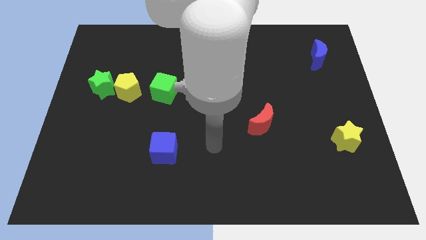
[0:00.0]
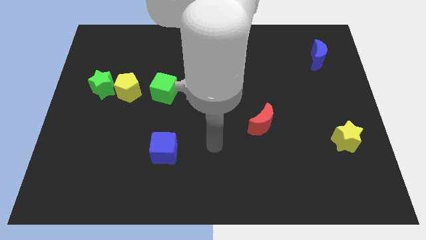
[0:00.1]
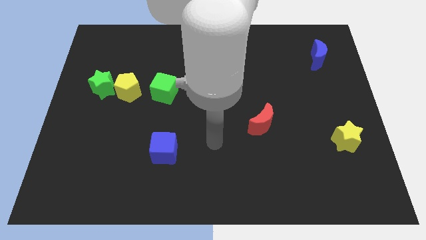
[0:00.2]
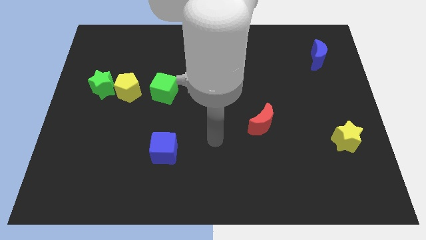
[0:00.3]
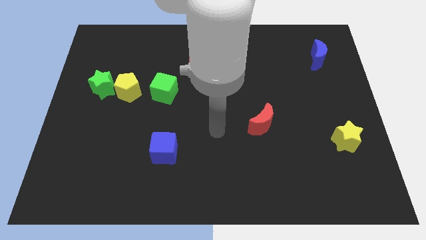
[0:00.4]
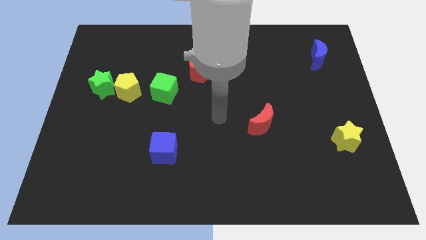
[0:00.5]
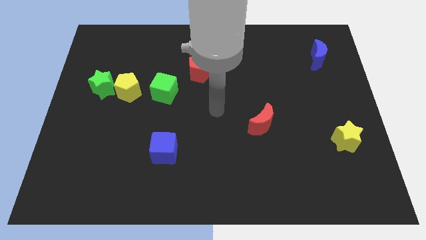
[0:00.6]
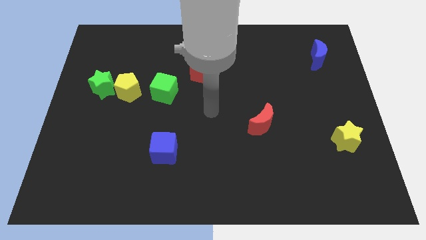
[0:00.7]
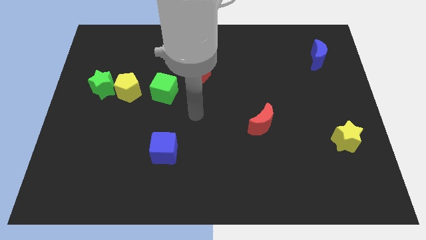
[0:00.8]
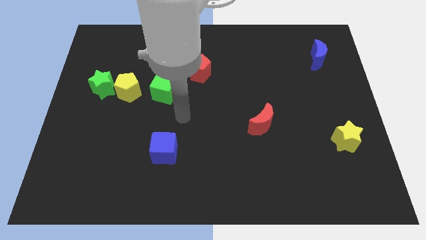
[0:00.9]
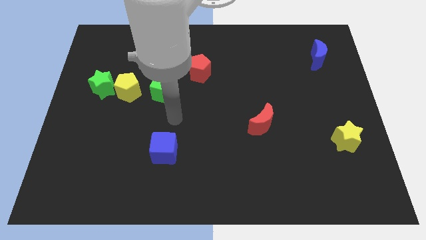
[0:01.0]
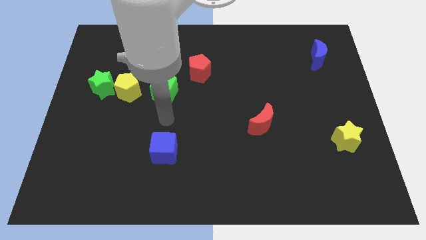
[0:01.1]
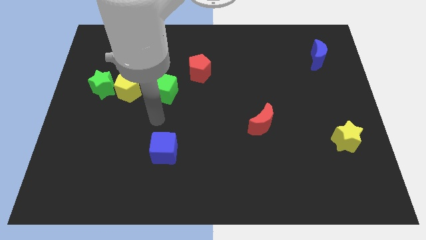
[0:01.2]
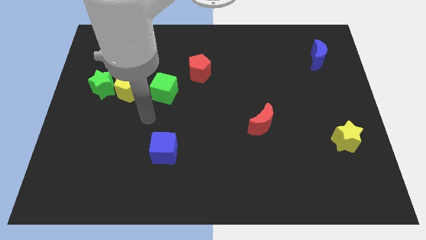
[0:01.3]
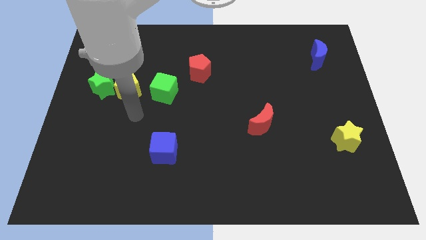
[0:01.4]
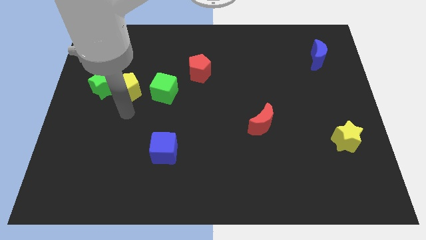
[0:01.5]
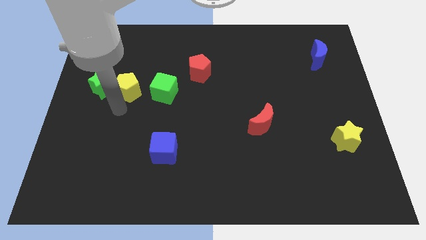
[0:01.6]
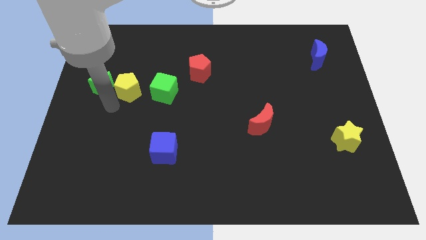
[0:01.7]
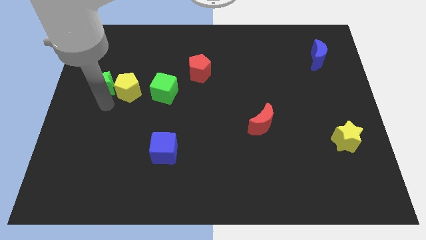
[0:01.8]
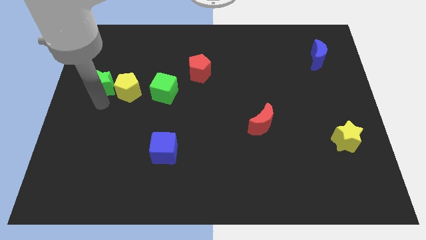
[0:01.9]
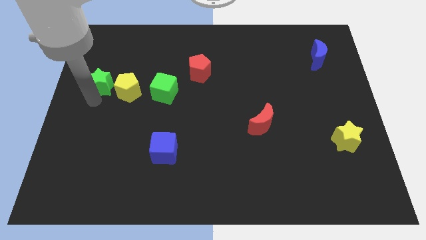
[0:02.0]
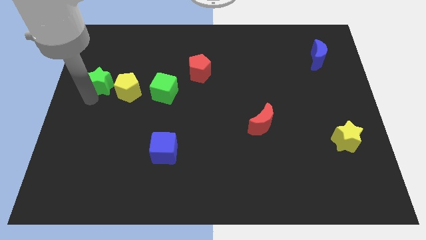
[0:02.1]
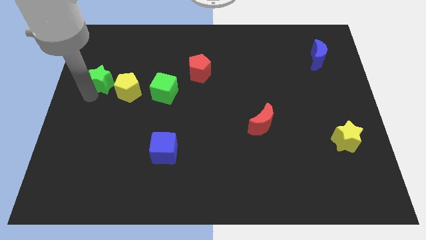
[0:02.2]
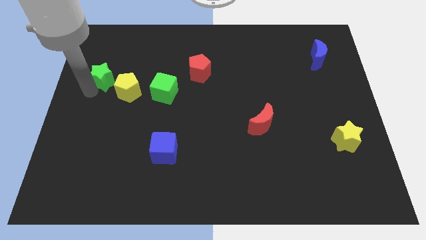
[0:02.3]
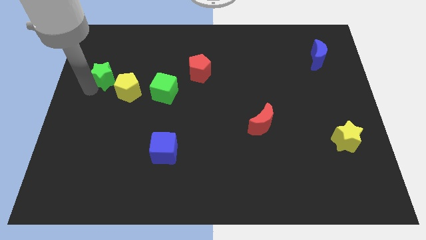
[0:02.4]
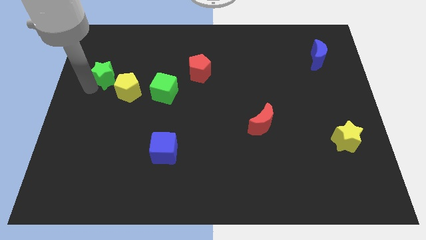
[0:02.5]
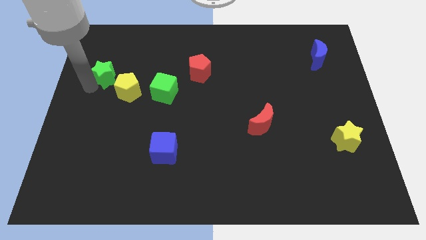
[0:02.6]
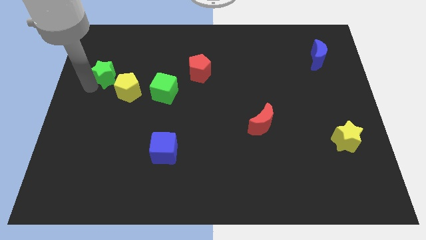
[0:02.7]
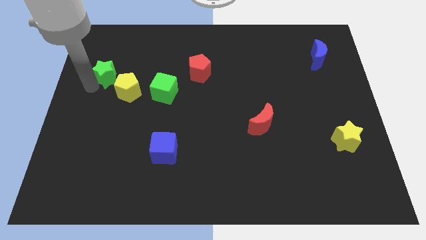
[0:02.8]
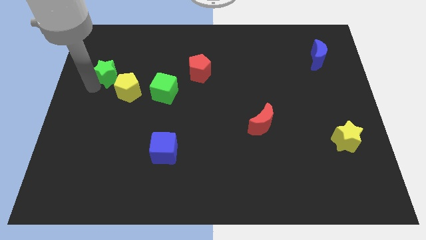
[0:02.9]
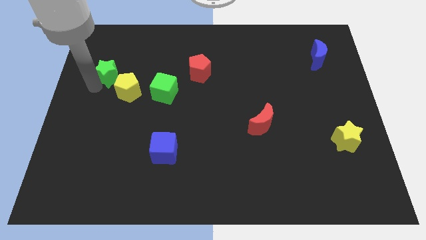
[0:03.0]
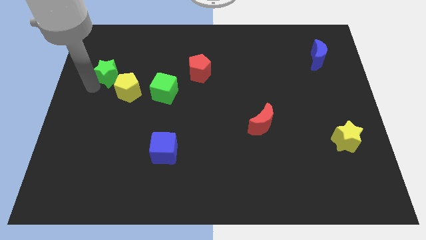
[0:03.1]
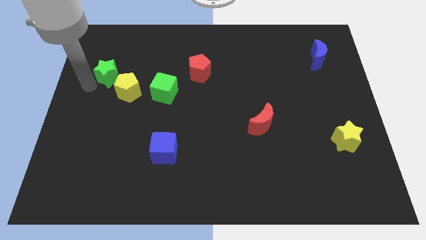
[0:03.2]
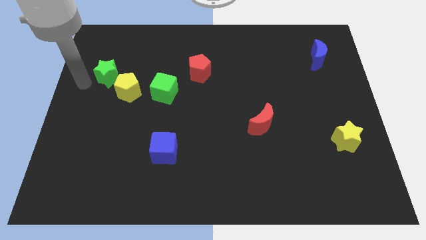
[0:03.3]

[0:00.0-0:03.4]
move the green star to the top left of the yellow pentagon

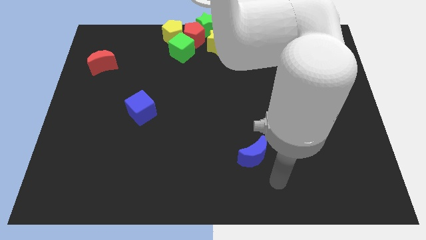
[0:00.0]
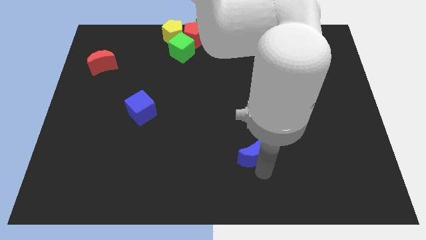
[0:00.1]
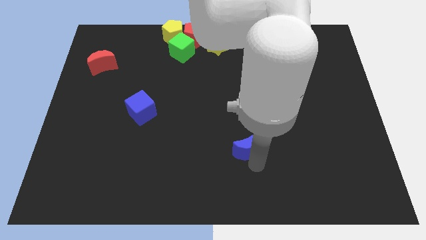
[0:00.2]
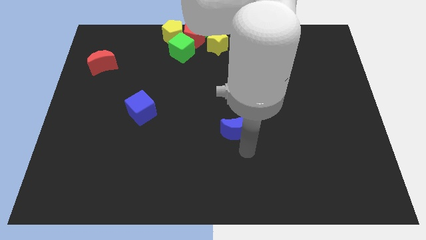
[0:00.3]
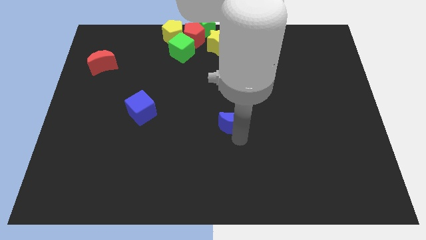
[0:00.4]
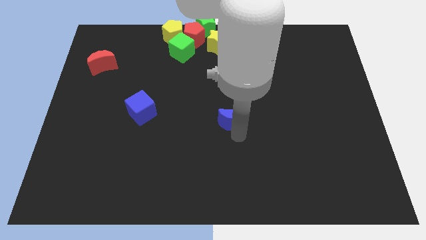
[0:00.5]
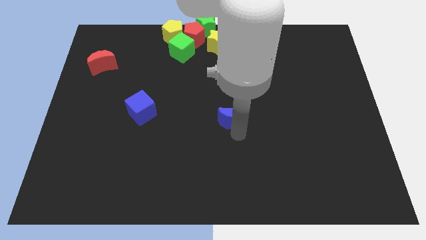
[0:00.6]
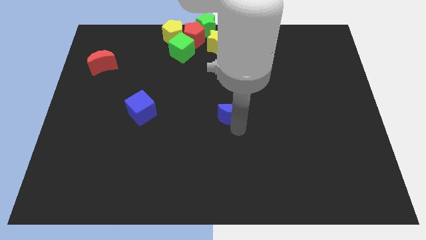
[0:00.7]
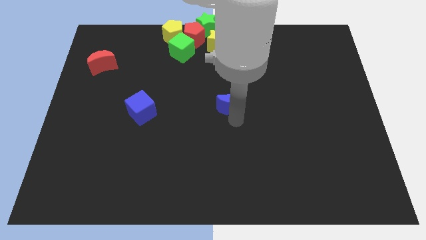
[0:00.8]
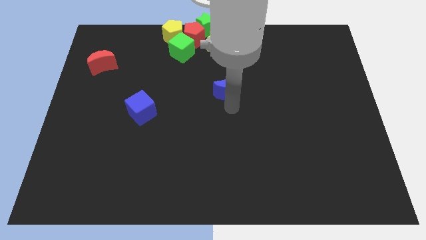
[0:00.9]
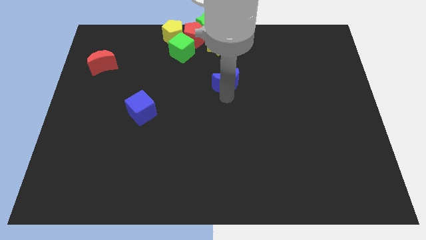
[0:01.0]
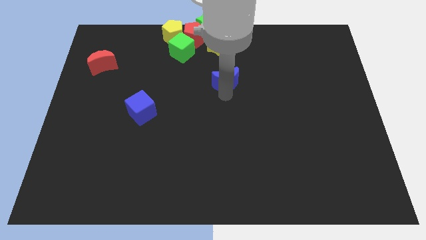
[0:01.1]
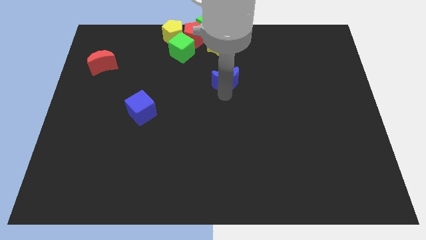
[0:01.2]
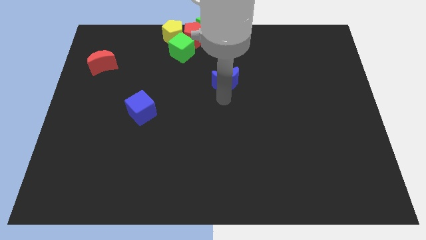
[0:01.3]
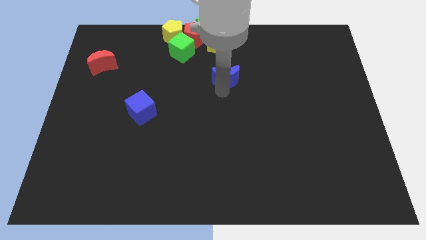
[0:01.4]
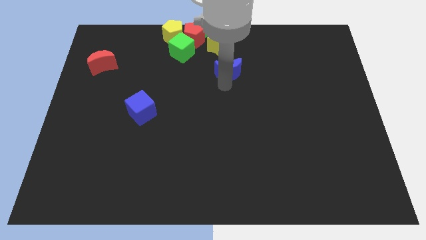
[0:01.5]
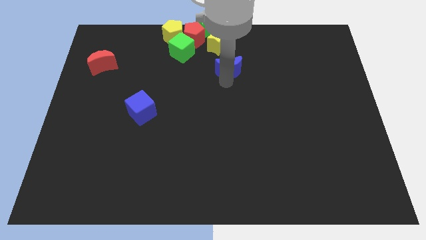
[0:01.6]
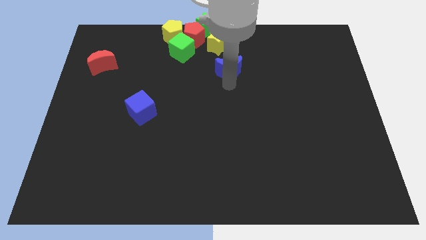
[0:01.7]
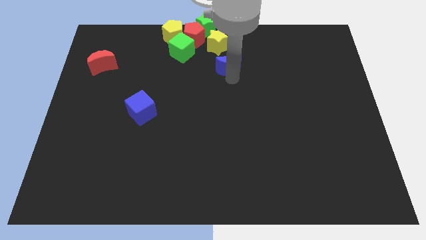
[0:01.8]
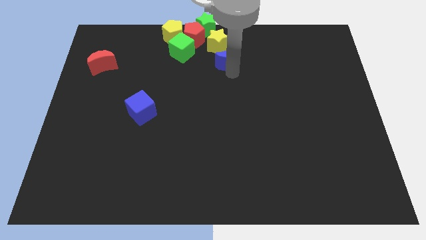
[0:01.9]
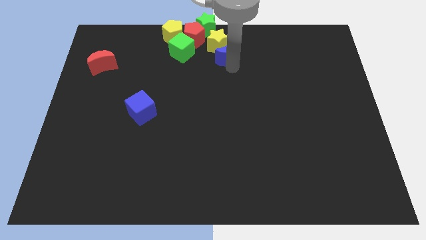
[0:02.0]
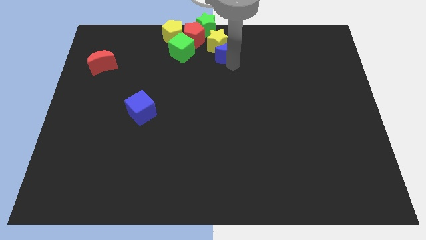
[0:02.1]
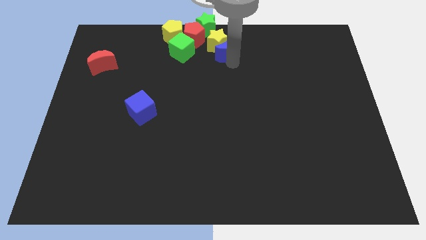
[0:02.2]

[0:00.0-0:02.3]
place blue moon below yellow star

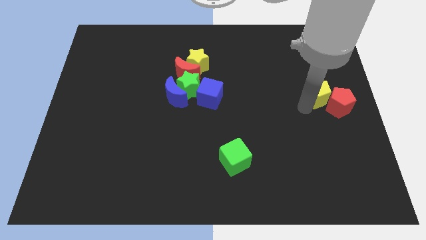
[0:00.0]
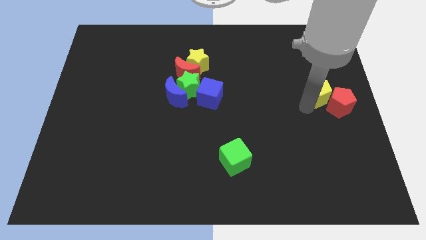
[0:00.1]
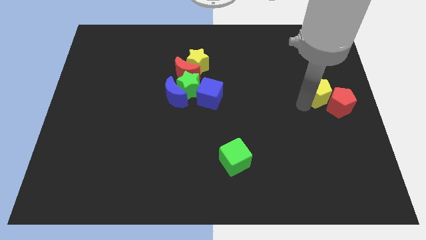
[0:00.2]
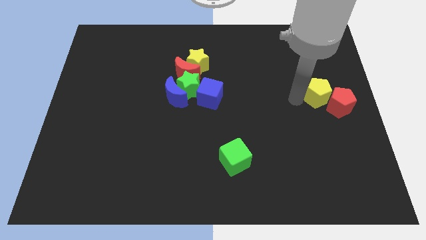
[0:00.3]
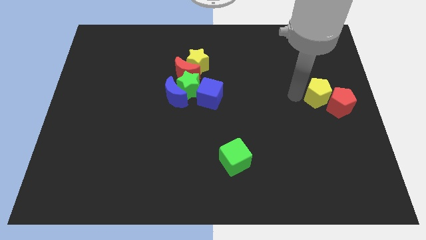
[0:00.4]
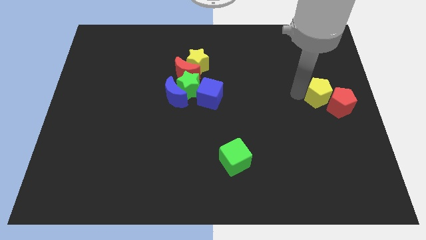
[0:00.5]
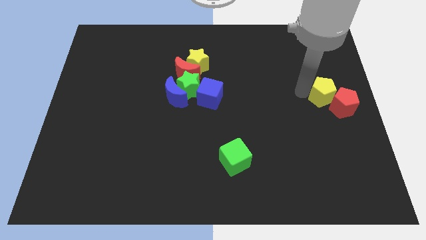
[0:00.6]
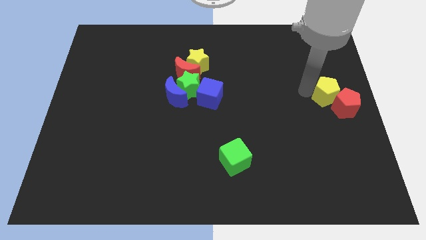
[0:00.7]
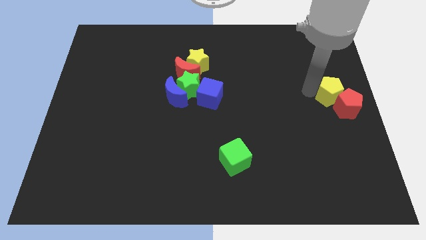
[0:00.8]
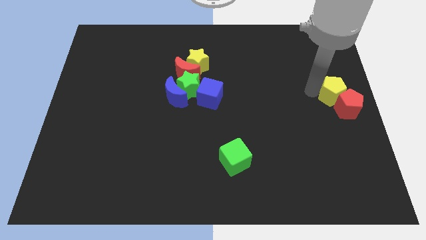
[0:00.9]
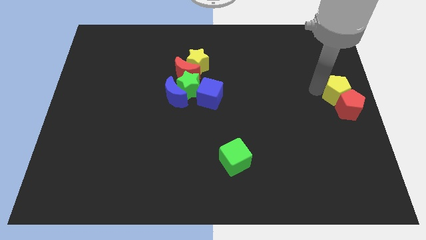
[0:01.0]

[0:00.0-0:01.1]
move the yellow pentagon and red pentagon to the center right of the block

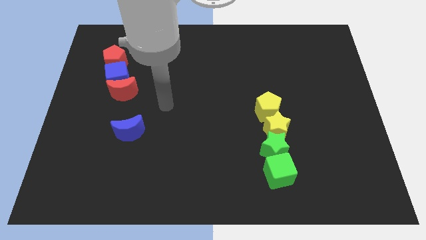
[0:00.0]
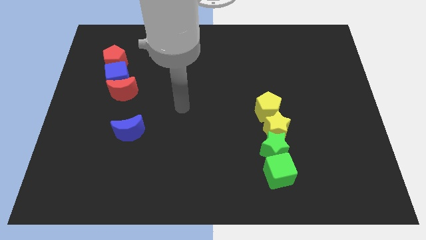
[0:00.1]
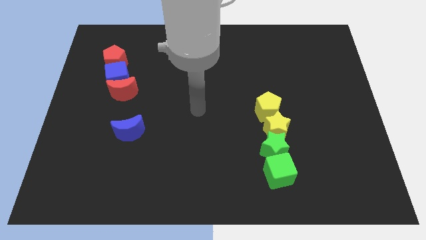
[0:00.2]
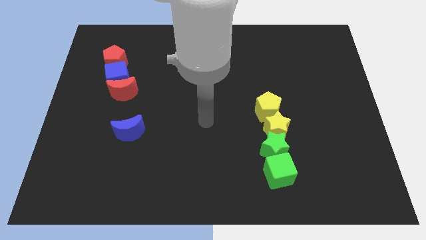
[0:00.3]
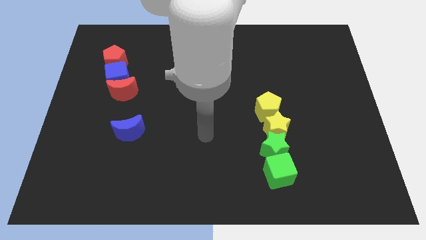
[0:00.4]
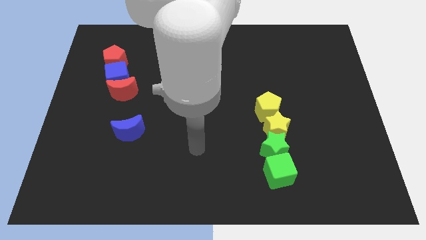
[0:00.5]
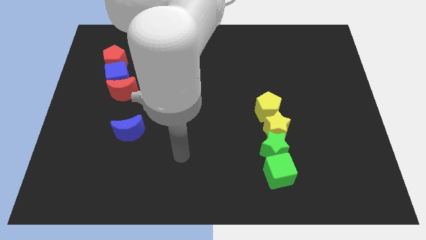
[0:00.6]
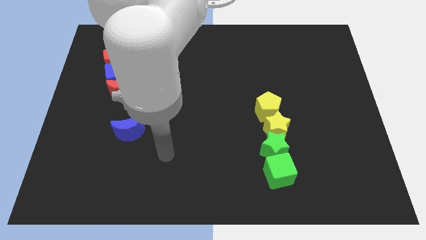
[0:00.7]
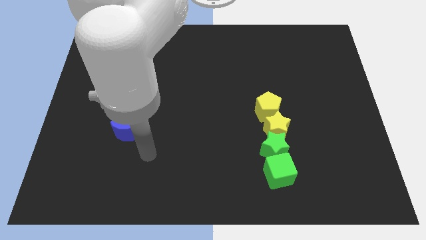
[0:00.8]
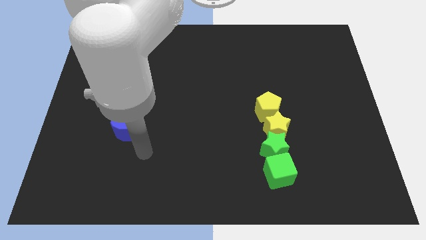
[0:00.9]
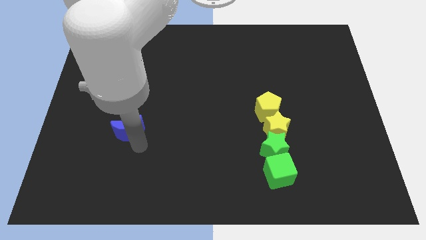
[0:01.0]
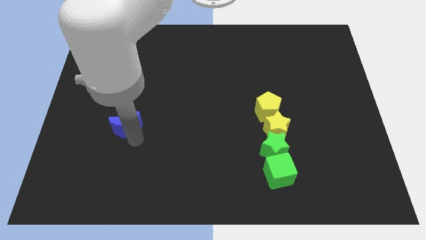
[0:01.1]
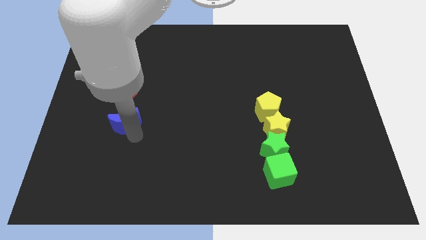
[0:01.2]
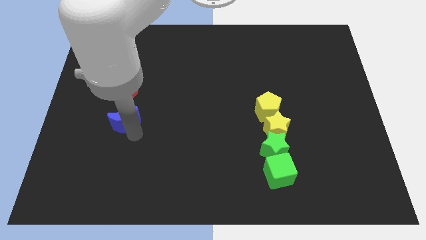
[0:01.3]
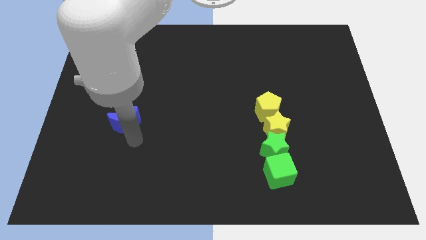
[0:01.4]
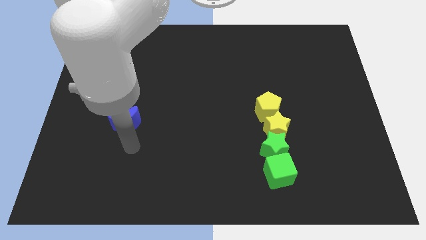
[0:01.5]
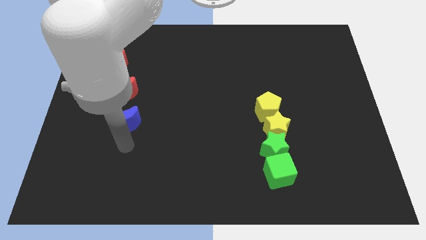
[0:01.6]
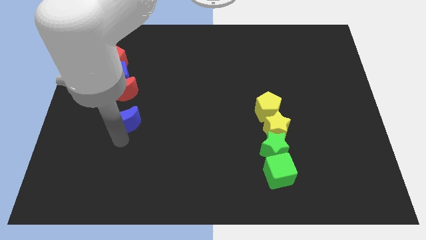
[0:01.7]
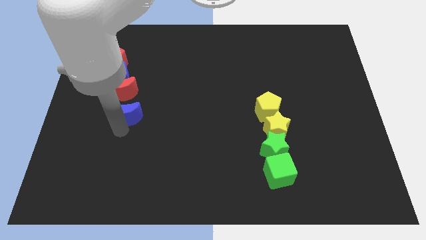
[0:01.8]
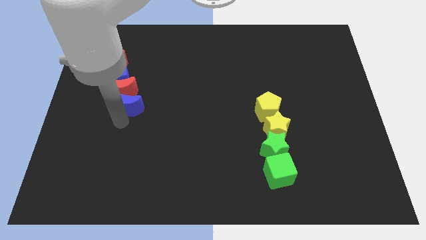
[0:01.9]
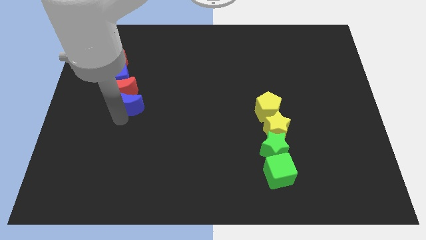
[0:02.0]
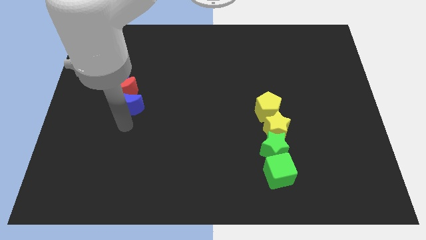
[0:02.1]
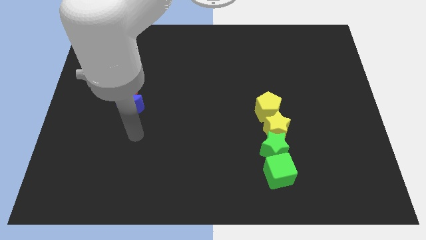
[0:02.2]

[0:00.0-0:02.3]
push the blue moon into the red moon
